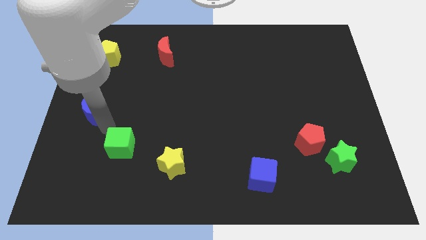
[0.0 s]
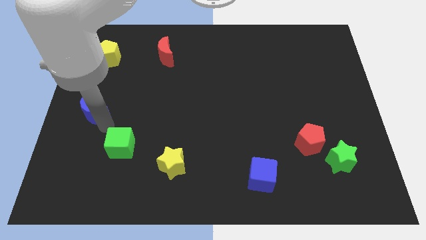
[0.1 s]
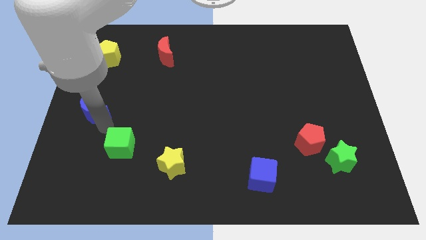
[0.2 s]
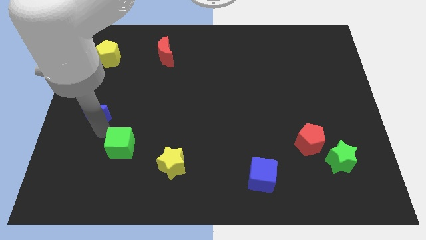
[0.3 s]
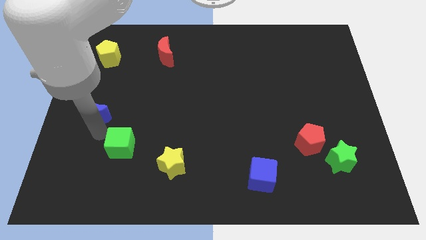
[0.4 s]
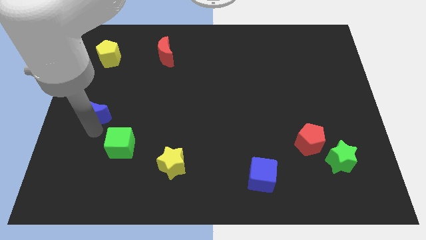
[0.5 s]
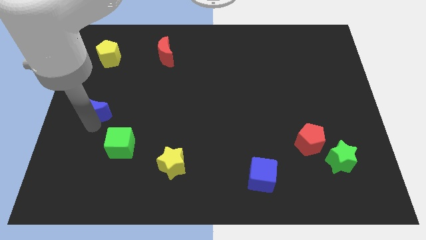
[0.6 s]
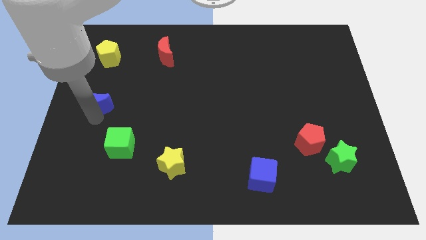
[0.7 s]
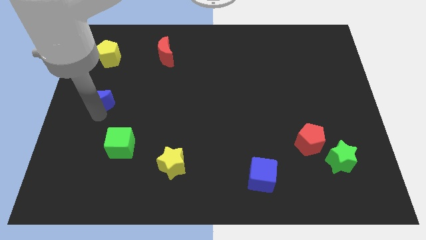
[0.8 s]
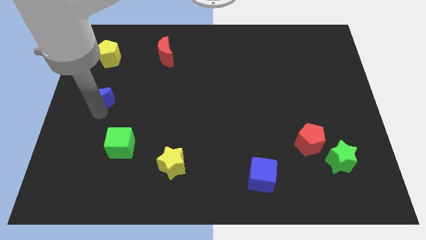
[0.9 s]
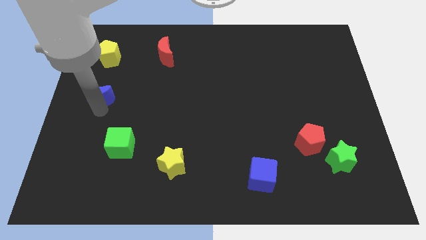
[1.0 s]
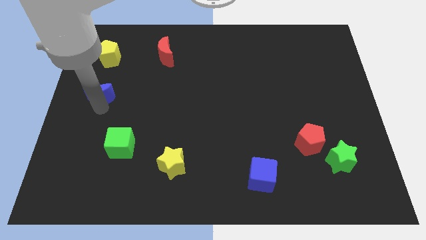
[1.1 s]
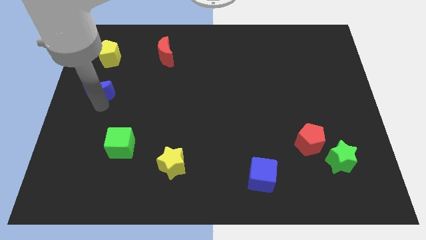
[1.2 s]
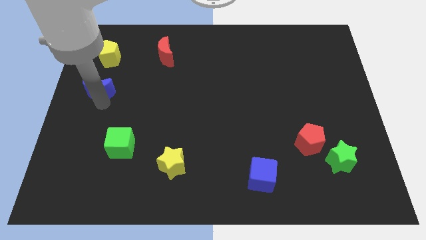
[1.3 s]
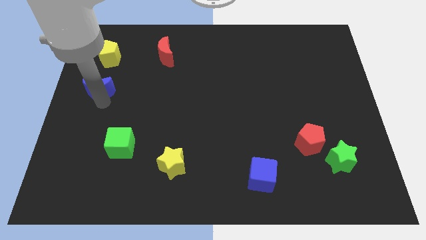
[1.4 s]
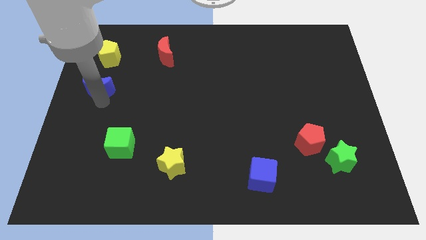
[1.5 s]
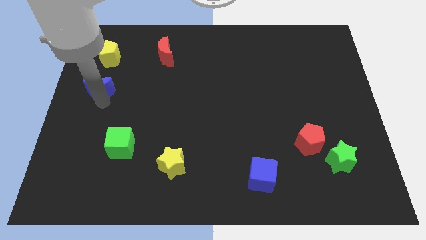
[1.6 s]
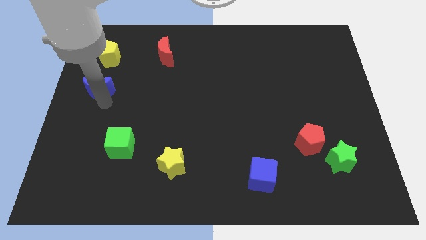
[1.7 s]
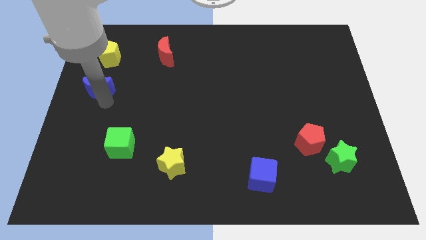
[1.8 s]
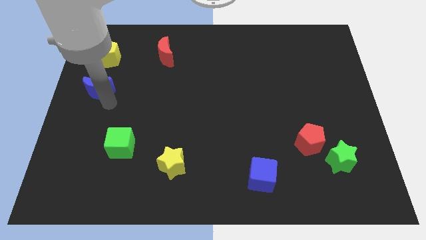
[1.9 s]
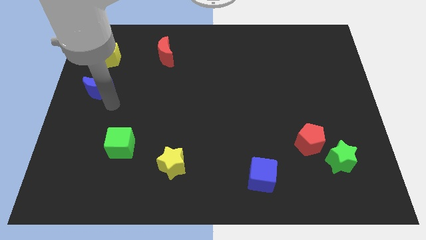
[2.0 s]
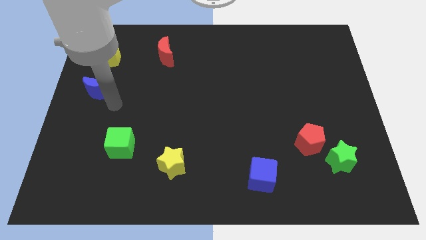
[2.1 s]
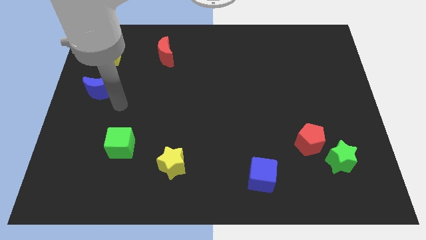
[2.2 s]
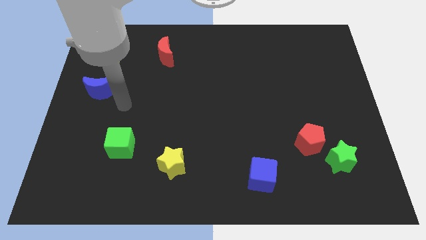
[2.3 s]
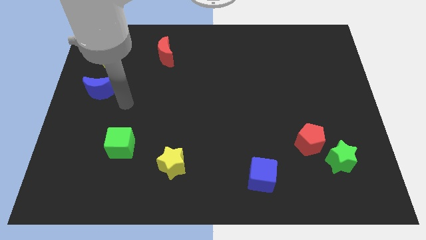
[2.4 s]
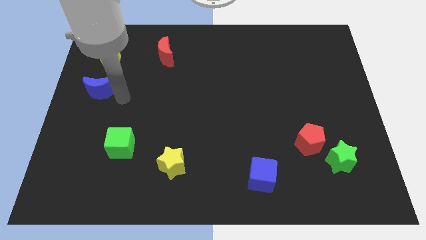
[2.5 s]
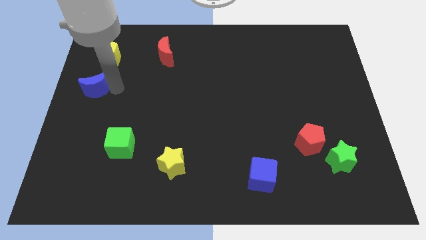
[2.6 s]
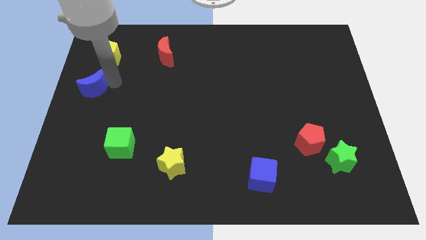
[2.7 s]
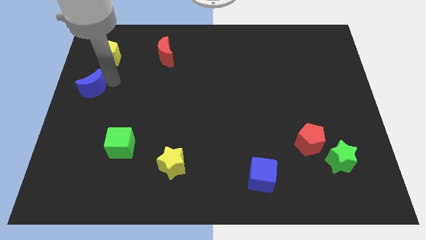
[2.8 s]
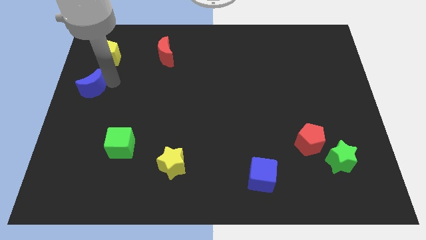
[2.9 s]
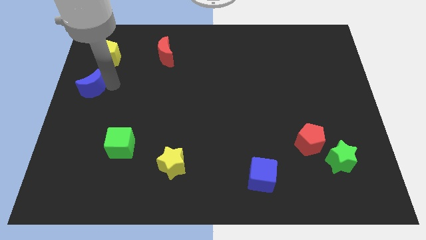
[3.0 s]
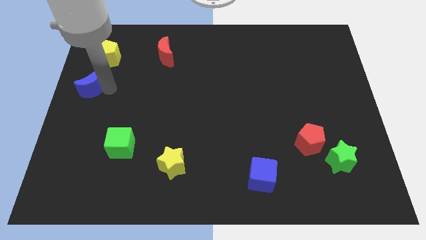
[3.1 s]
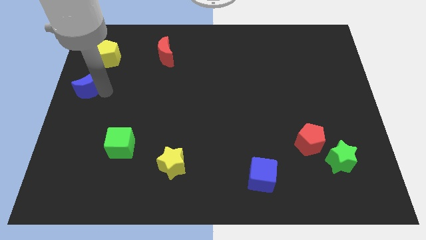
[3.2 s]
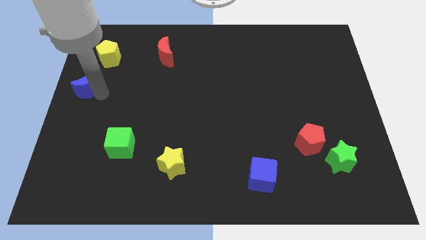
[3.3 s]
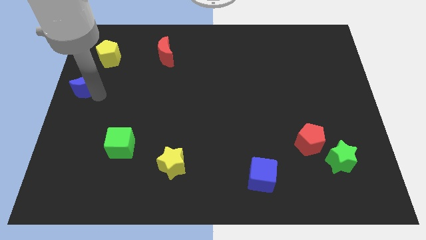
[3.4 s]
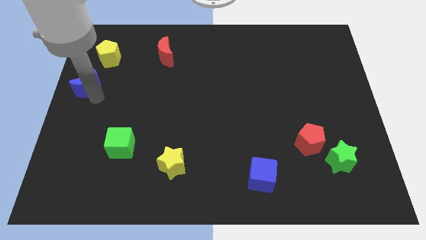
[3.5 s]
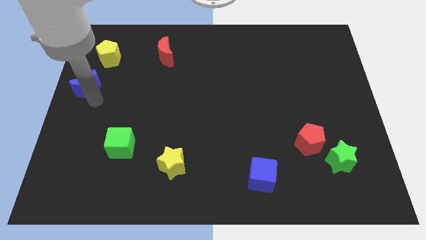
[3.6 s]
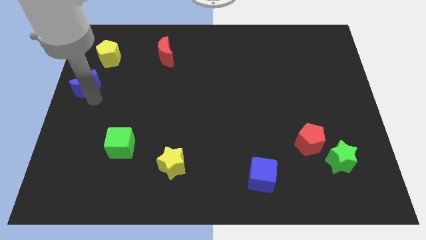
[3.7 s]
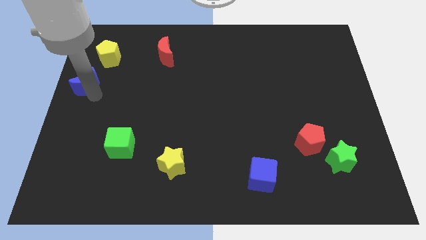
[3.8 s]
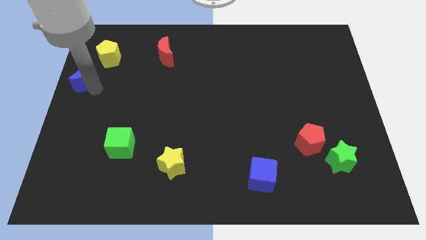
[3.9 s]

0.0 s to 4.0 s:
move the blue crescent to the bottom left of the yellow pentagon

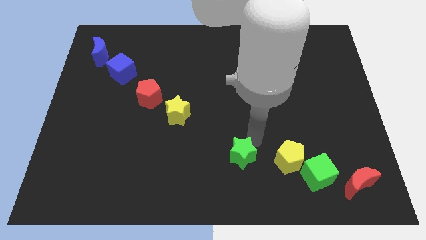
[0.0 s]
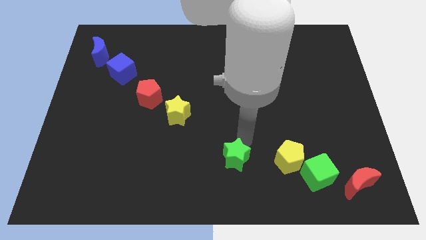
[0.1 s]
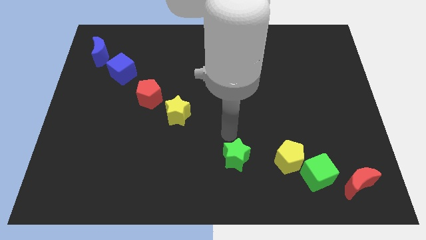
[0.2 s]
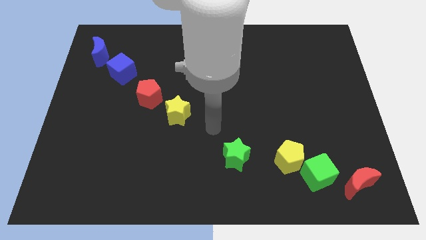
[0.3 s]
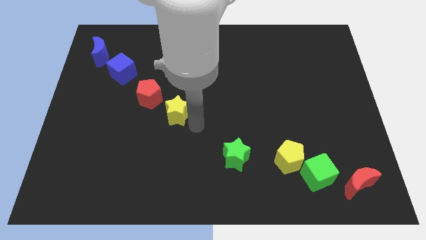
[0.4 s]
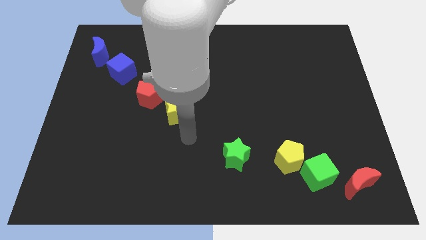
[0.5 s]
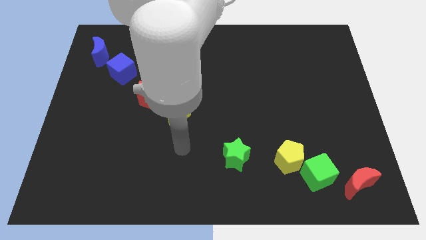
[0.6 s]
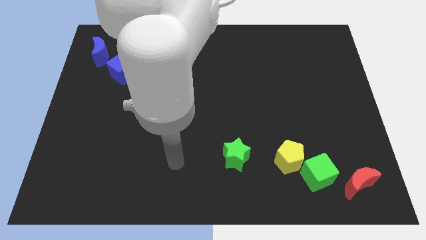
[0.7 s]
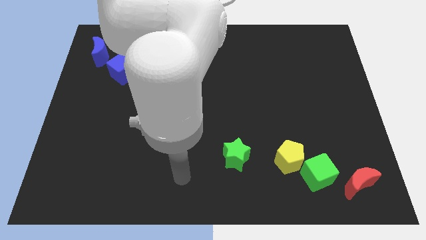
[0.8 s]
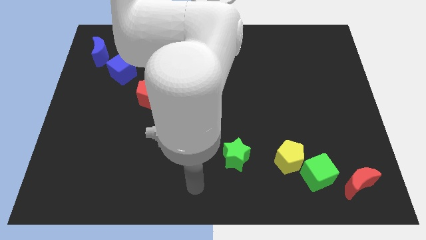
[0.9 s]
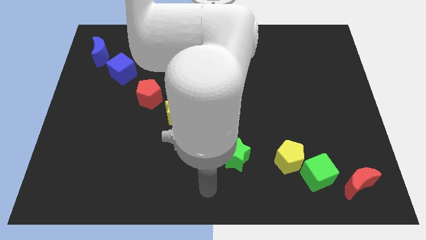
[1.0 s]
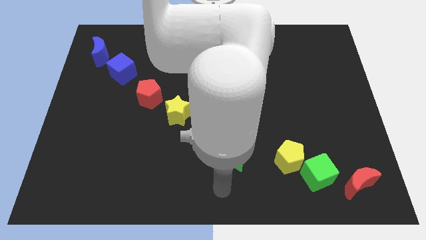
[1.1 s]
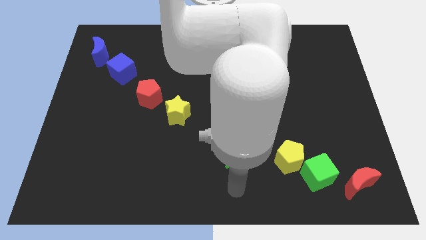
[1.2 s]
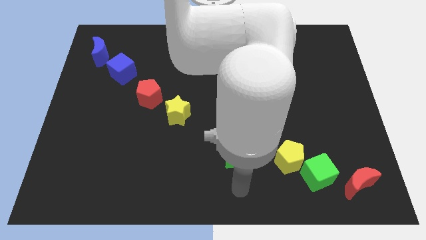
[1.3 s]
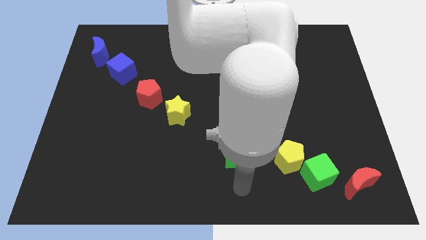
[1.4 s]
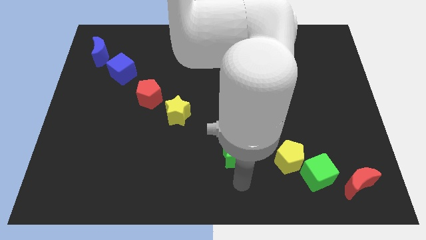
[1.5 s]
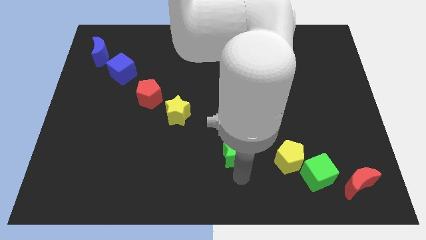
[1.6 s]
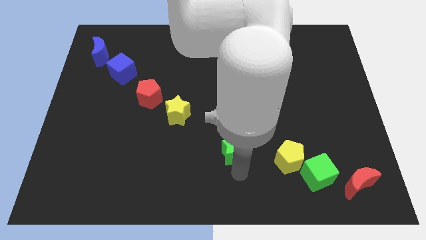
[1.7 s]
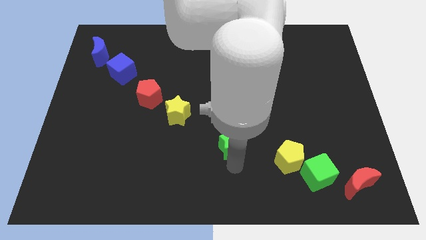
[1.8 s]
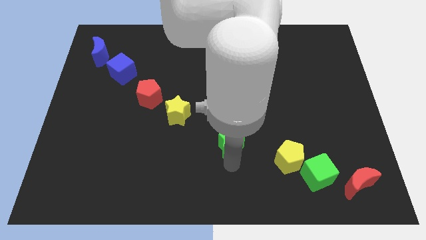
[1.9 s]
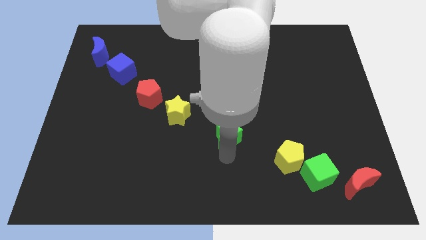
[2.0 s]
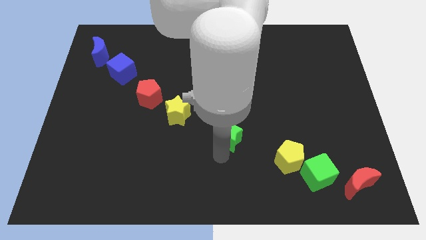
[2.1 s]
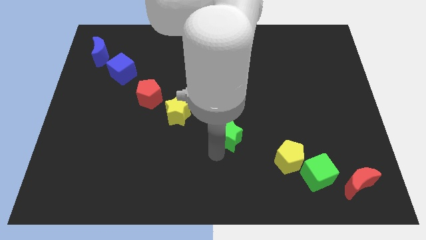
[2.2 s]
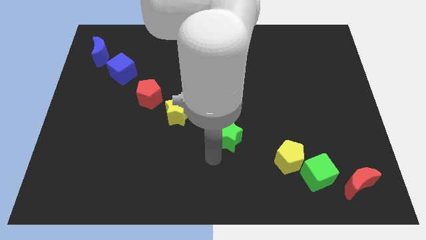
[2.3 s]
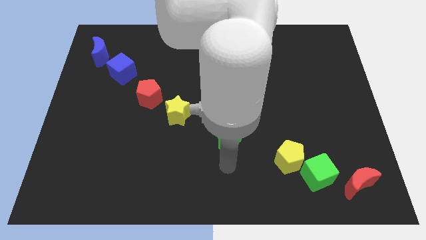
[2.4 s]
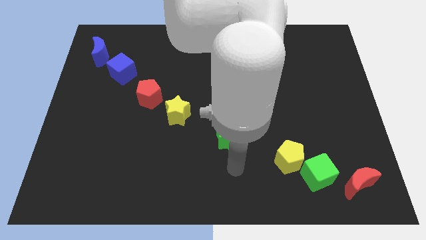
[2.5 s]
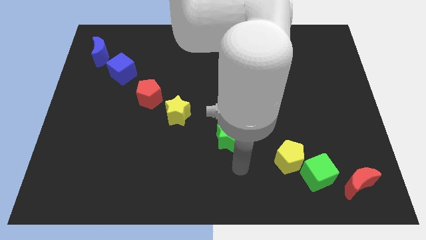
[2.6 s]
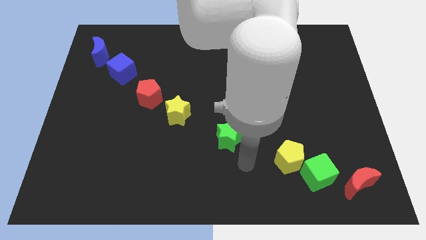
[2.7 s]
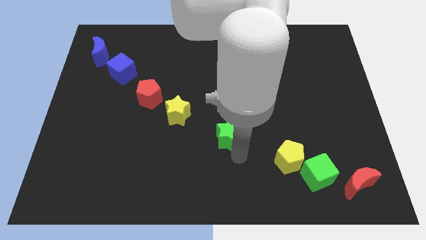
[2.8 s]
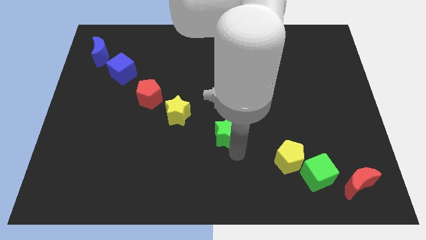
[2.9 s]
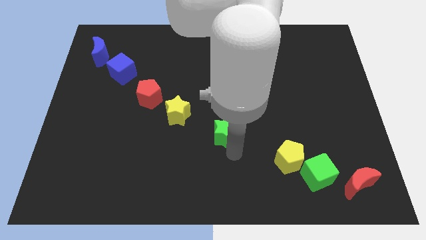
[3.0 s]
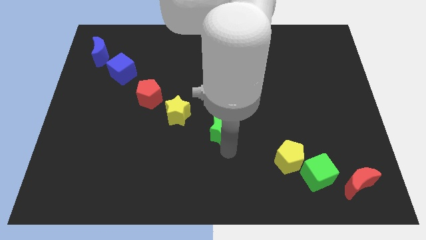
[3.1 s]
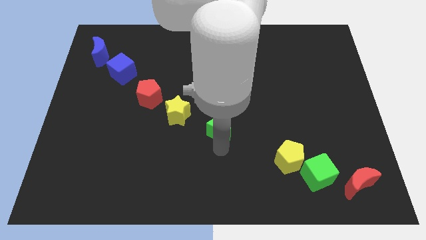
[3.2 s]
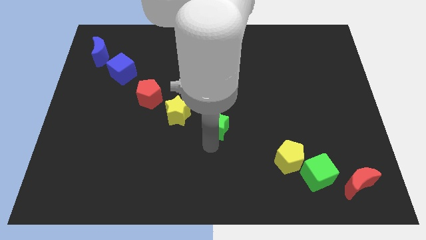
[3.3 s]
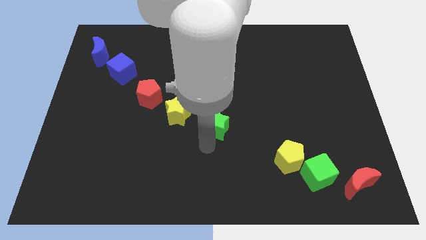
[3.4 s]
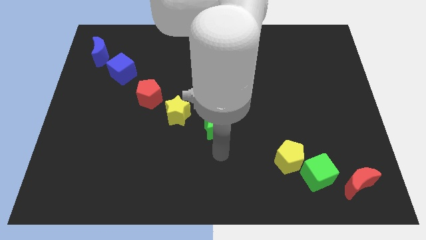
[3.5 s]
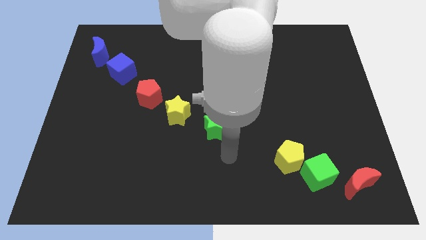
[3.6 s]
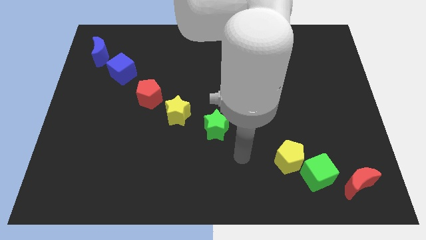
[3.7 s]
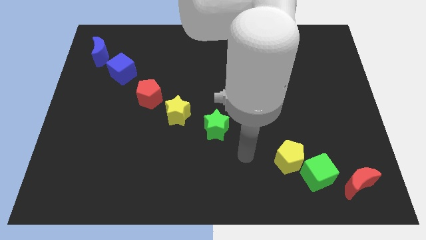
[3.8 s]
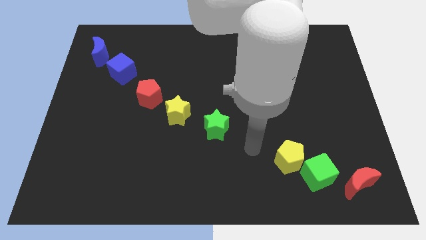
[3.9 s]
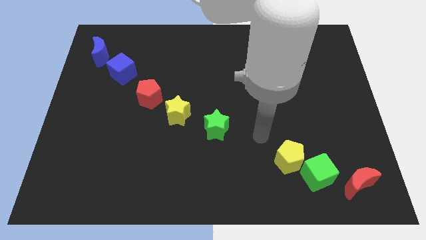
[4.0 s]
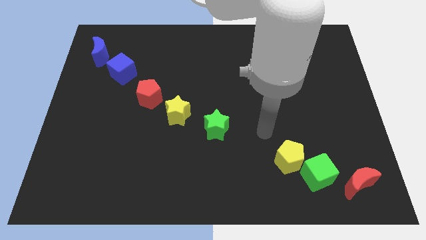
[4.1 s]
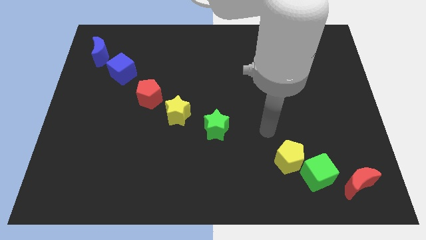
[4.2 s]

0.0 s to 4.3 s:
move the green star to the center of the board

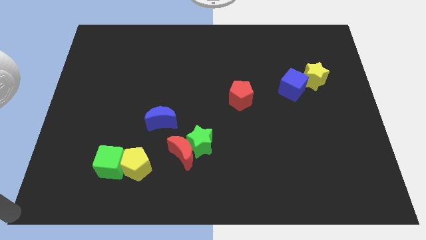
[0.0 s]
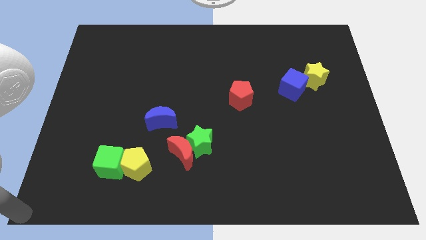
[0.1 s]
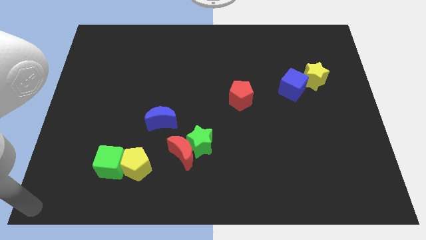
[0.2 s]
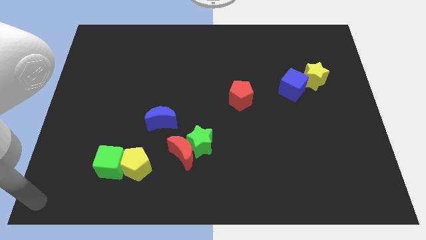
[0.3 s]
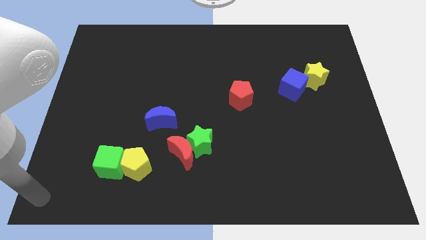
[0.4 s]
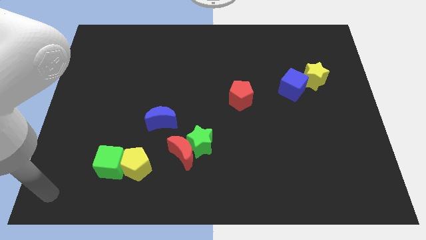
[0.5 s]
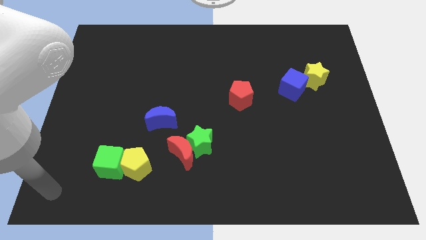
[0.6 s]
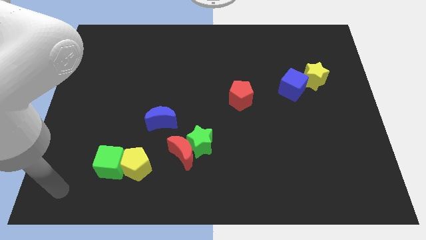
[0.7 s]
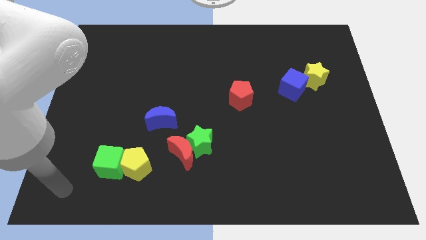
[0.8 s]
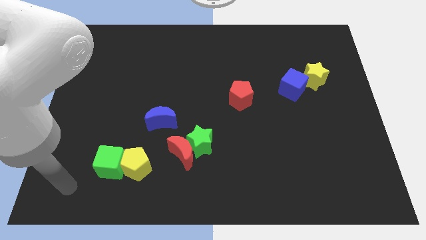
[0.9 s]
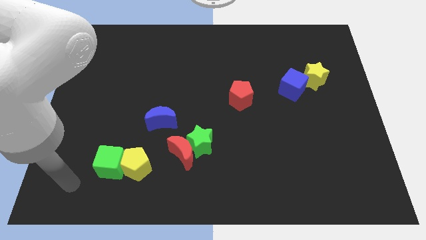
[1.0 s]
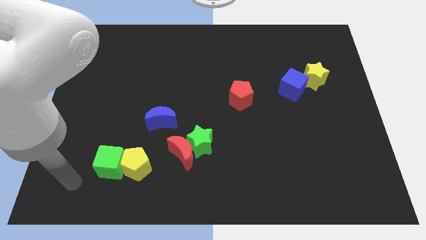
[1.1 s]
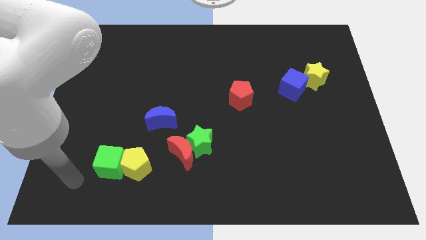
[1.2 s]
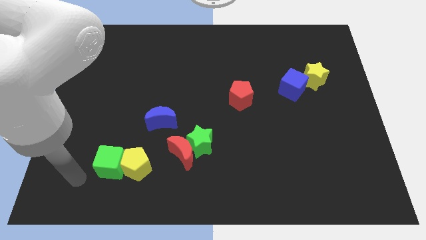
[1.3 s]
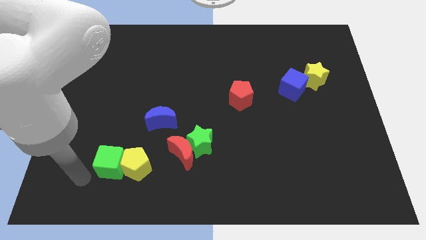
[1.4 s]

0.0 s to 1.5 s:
point your arm at the left of the green cube
